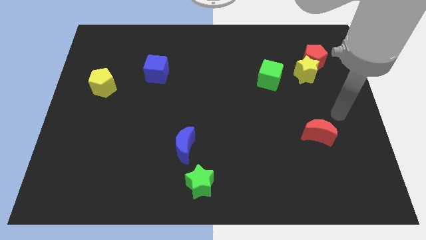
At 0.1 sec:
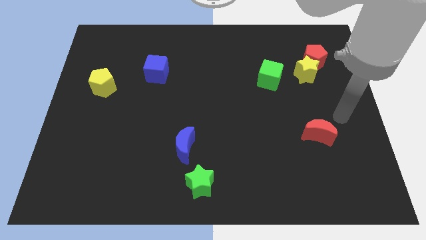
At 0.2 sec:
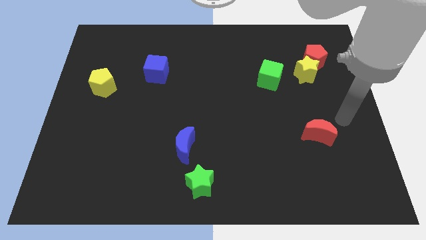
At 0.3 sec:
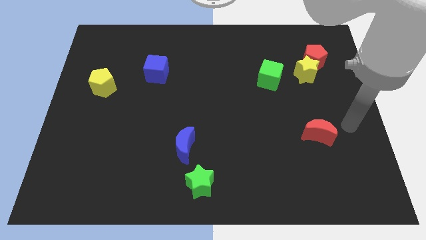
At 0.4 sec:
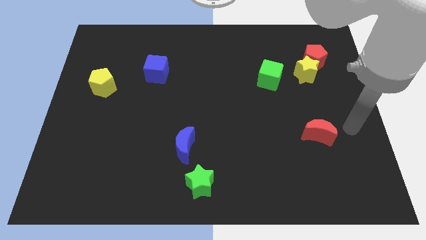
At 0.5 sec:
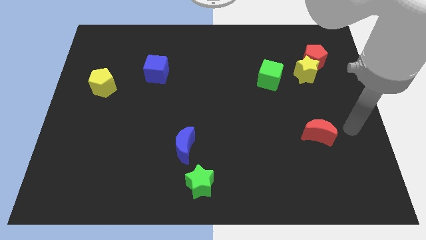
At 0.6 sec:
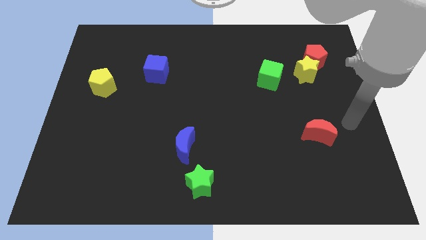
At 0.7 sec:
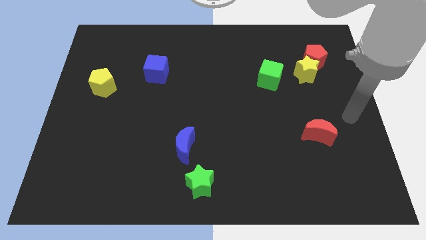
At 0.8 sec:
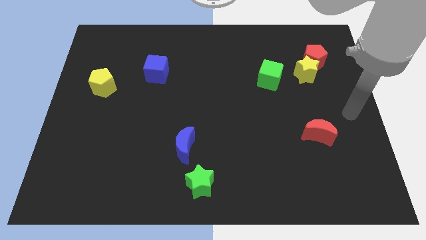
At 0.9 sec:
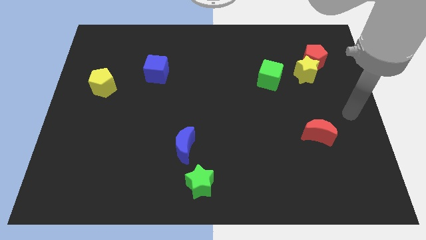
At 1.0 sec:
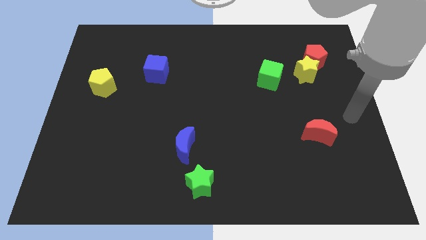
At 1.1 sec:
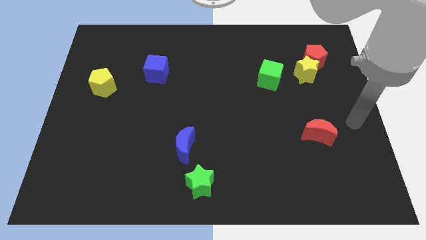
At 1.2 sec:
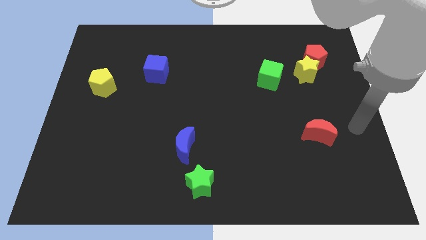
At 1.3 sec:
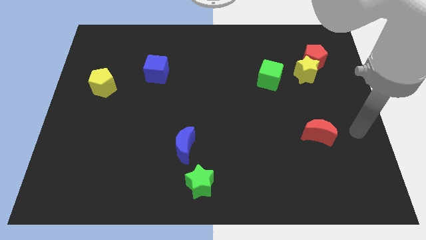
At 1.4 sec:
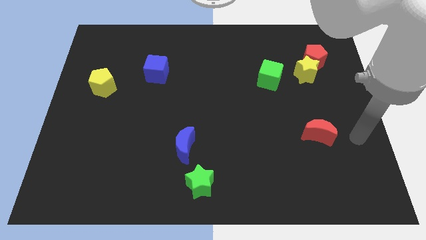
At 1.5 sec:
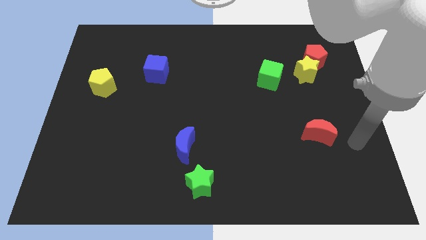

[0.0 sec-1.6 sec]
put your hand to the right of the red crescent

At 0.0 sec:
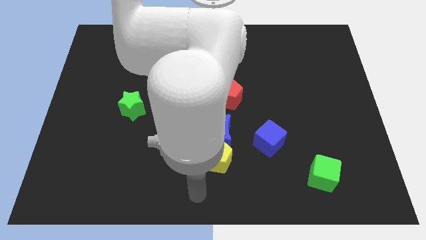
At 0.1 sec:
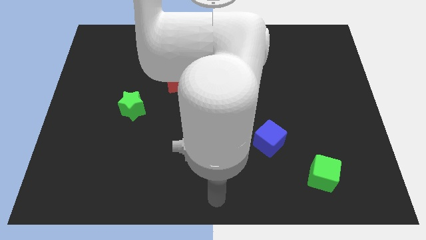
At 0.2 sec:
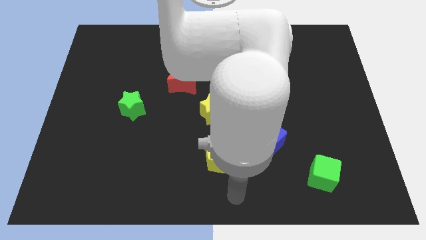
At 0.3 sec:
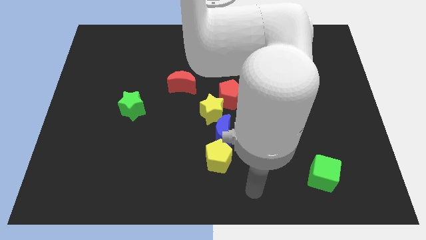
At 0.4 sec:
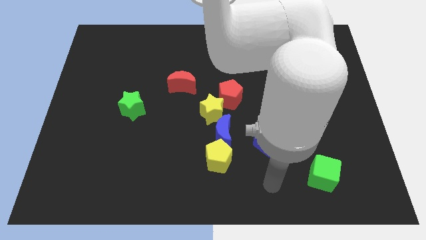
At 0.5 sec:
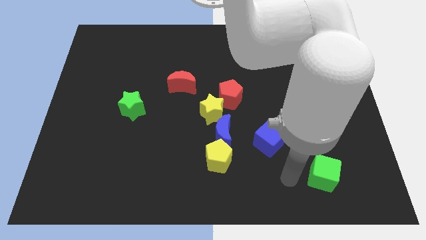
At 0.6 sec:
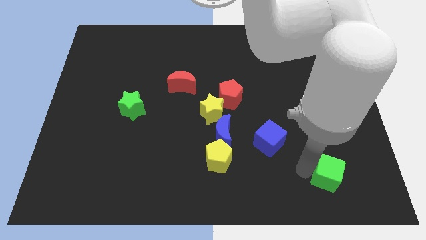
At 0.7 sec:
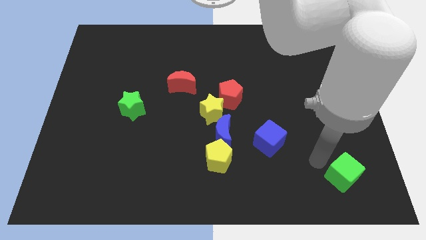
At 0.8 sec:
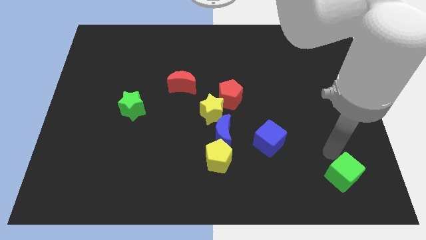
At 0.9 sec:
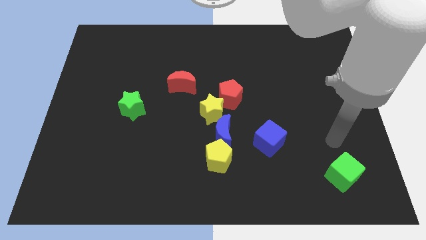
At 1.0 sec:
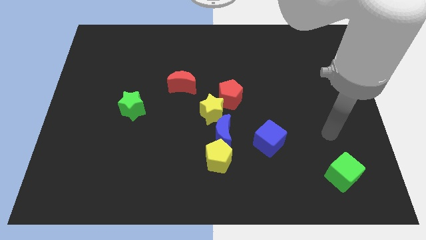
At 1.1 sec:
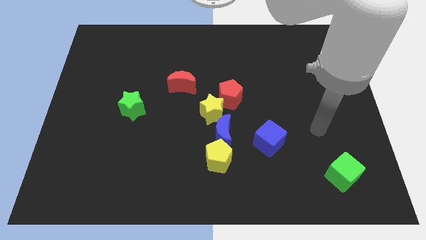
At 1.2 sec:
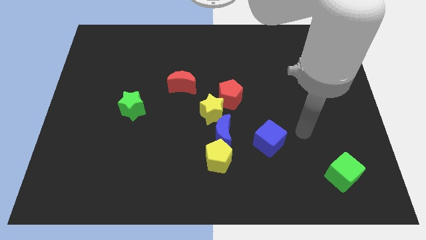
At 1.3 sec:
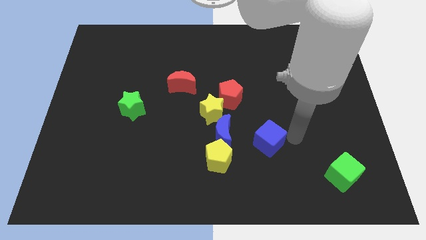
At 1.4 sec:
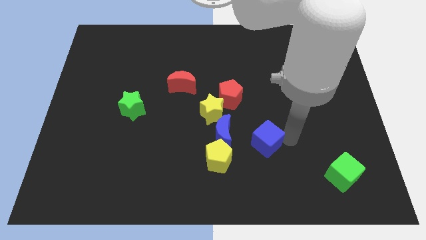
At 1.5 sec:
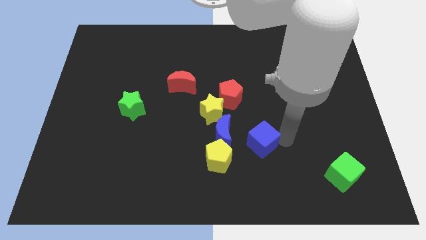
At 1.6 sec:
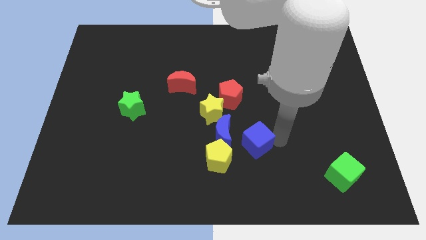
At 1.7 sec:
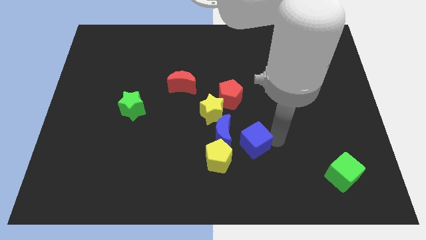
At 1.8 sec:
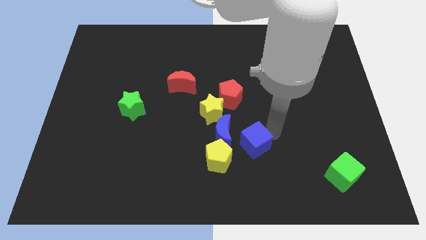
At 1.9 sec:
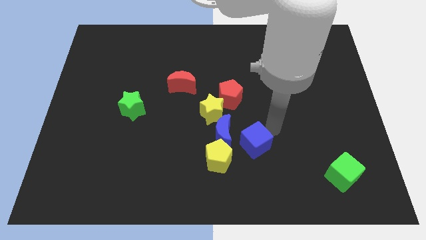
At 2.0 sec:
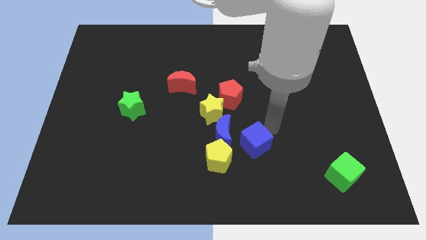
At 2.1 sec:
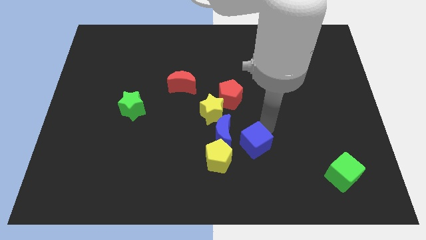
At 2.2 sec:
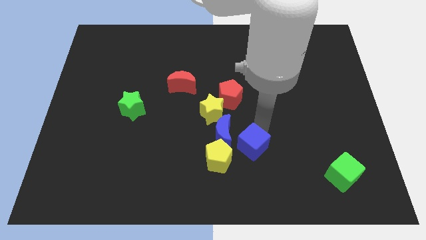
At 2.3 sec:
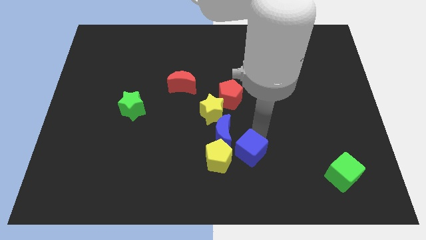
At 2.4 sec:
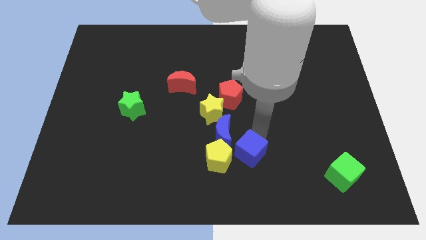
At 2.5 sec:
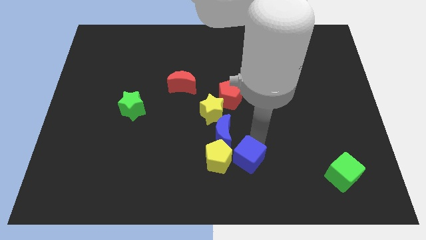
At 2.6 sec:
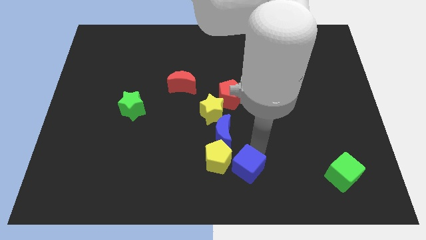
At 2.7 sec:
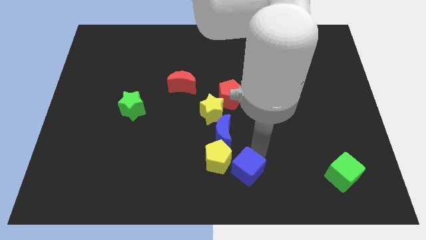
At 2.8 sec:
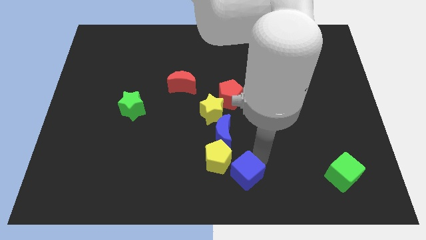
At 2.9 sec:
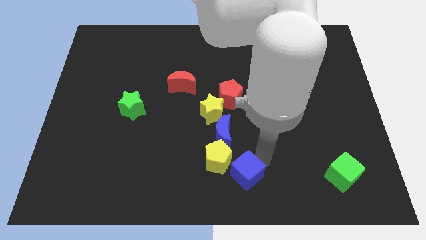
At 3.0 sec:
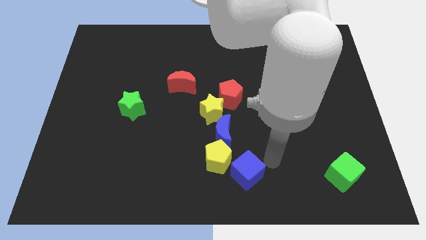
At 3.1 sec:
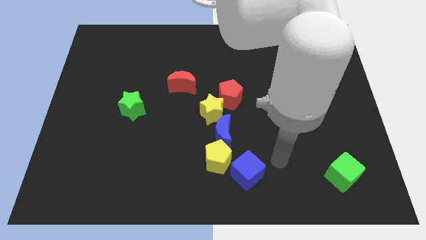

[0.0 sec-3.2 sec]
add blue cube into yellow pentagon

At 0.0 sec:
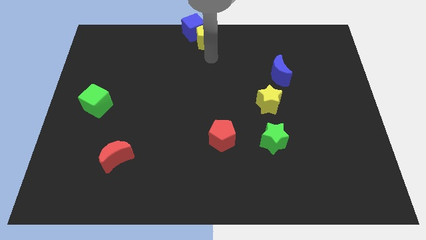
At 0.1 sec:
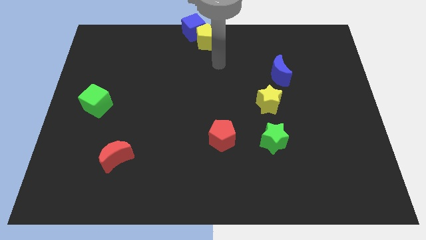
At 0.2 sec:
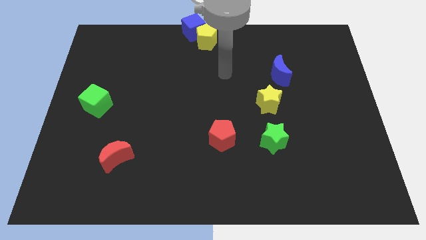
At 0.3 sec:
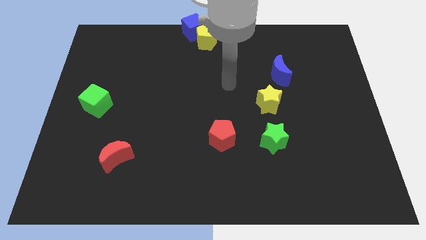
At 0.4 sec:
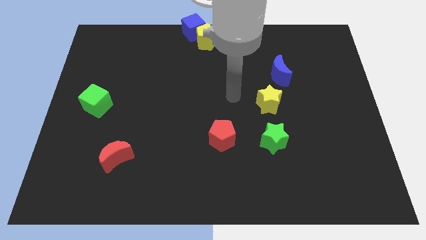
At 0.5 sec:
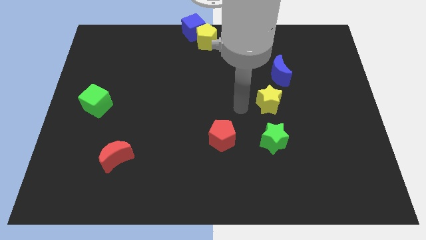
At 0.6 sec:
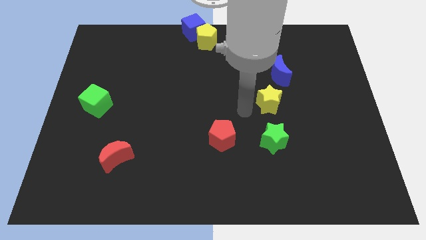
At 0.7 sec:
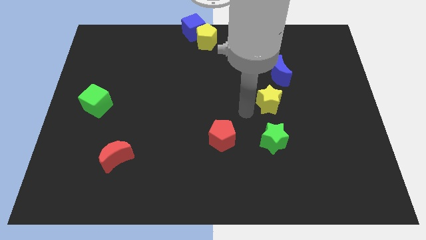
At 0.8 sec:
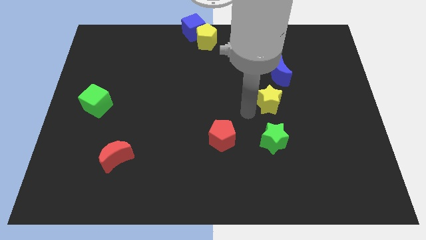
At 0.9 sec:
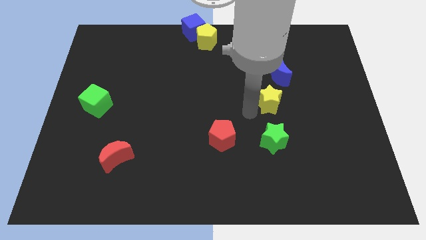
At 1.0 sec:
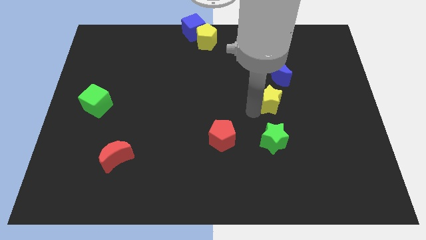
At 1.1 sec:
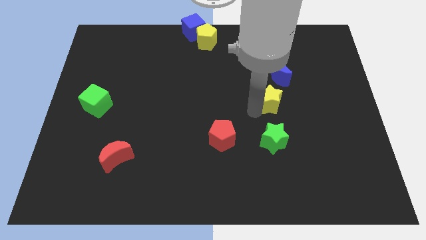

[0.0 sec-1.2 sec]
move the arm towards the yellow star

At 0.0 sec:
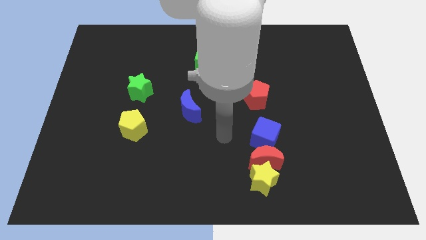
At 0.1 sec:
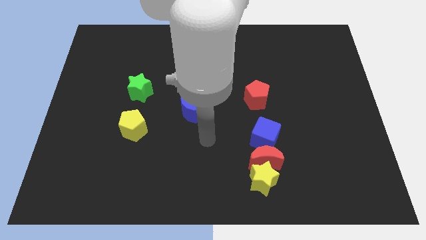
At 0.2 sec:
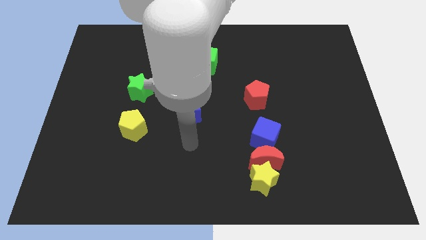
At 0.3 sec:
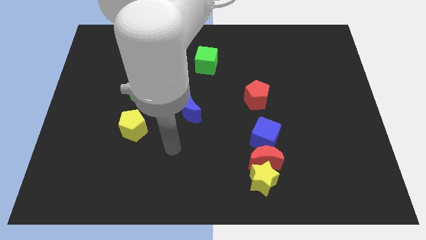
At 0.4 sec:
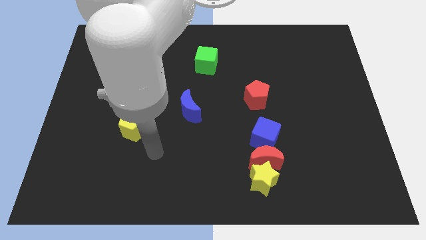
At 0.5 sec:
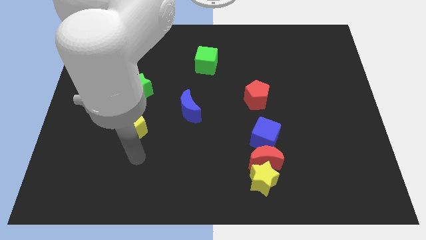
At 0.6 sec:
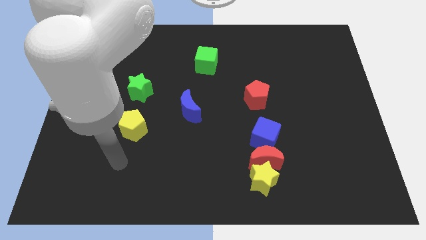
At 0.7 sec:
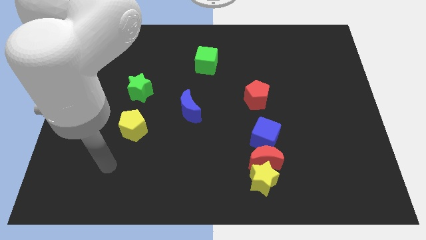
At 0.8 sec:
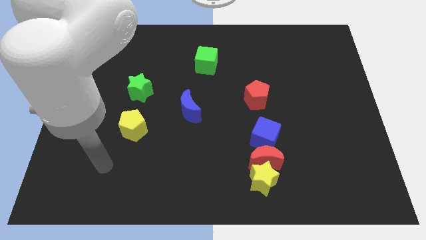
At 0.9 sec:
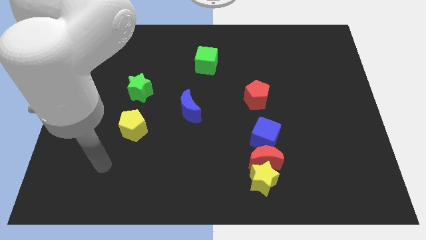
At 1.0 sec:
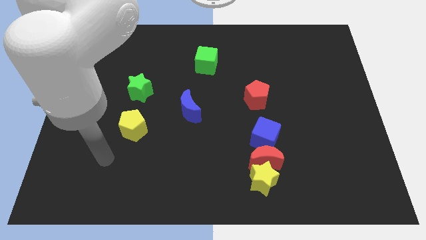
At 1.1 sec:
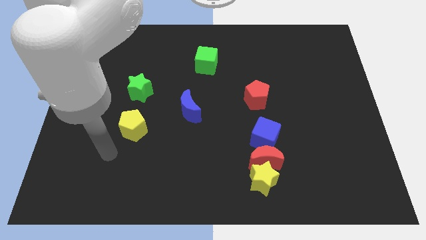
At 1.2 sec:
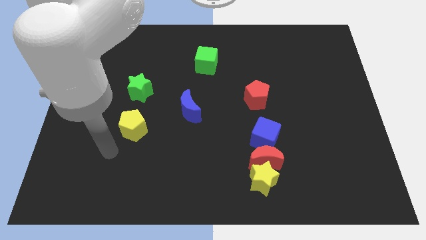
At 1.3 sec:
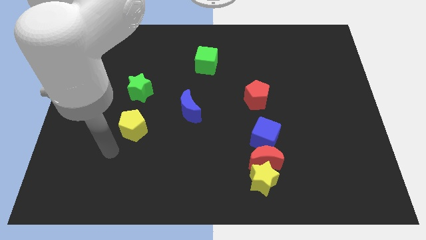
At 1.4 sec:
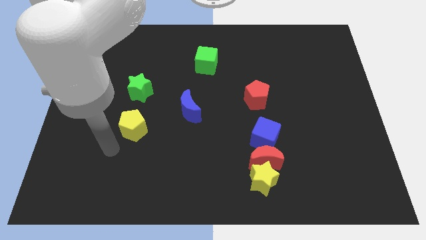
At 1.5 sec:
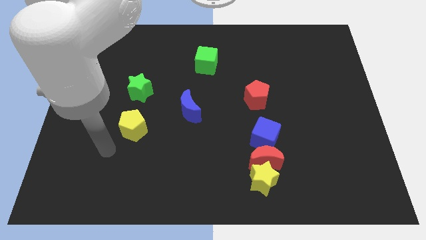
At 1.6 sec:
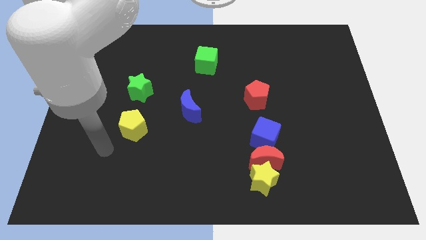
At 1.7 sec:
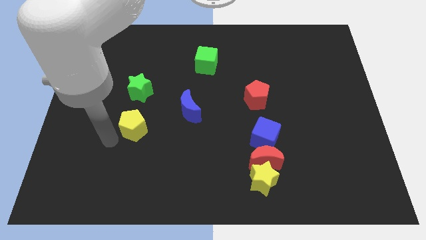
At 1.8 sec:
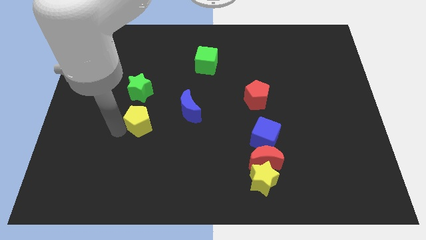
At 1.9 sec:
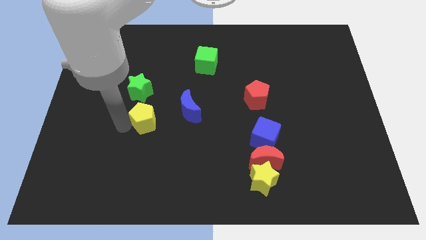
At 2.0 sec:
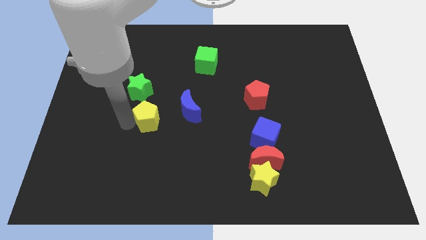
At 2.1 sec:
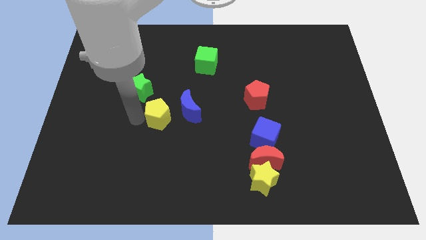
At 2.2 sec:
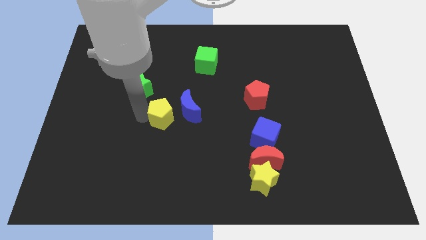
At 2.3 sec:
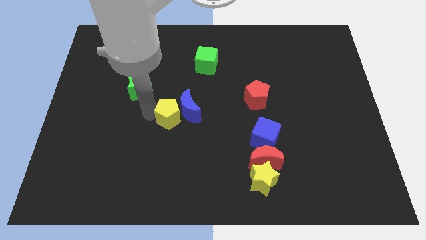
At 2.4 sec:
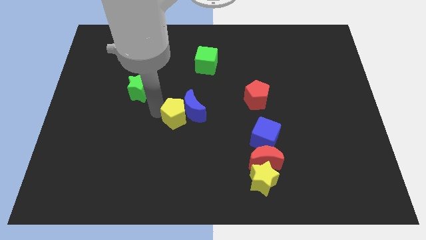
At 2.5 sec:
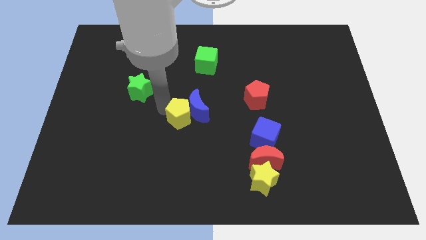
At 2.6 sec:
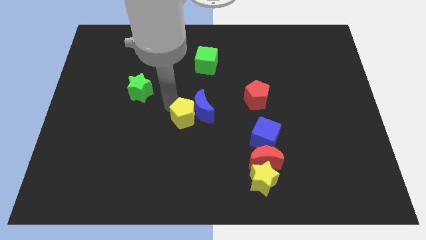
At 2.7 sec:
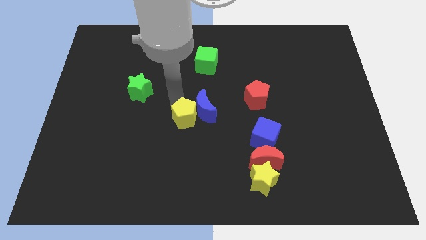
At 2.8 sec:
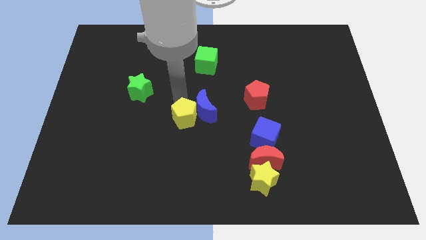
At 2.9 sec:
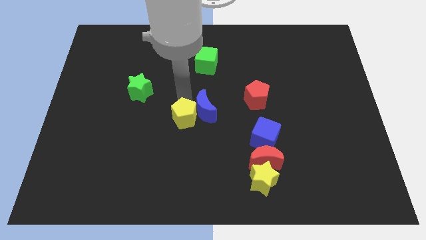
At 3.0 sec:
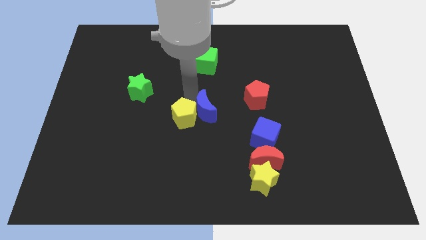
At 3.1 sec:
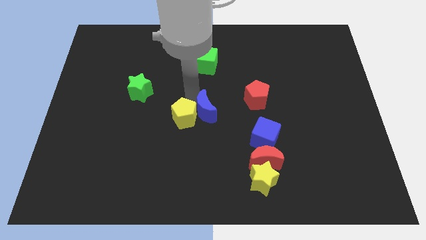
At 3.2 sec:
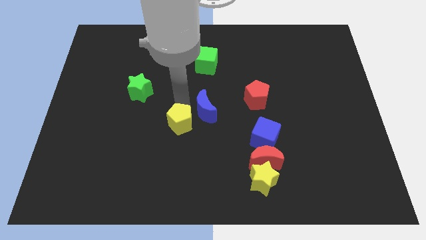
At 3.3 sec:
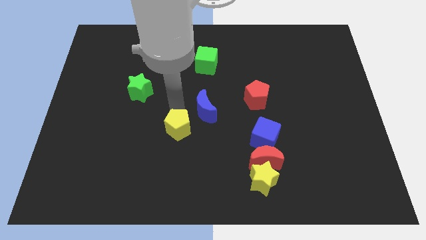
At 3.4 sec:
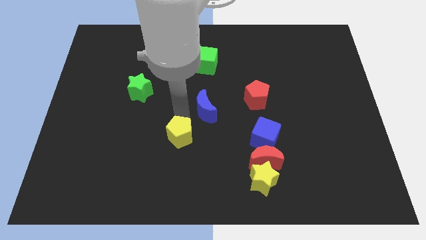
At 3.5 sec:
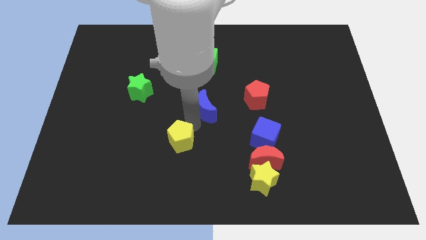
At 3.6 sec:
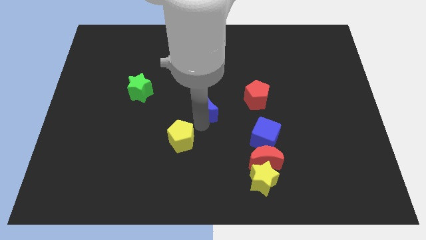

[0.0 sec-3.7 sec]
push the yellow pentagon slightly
